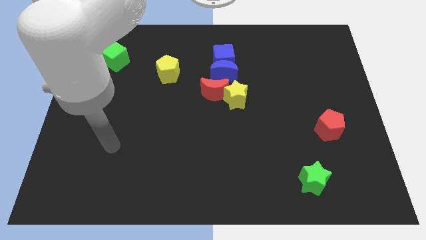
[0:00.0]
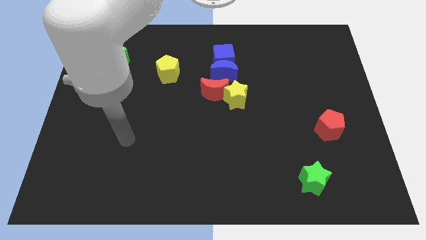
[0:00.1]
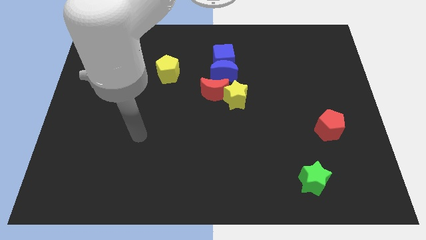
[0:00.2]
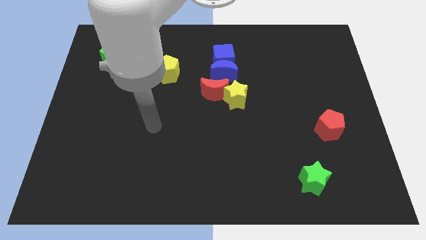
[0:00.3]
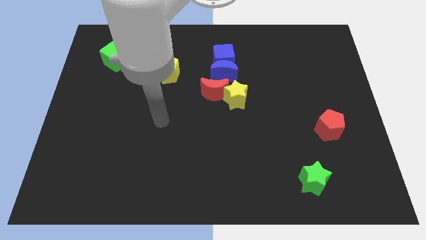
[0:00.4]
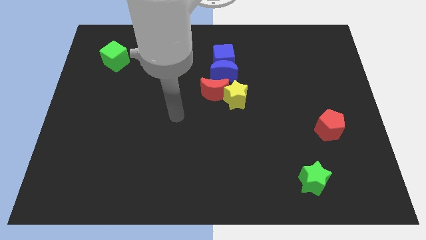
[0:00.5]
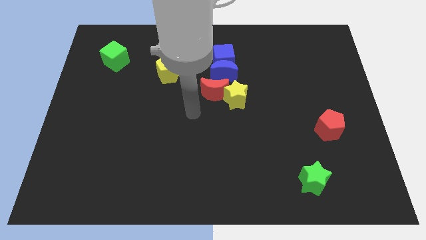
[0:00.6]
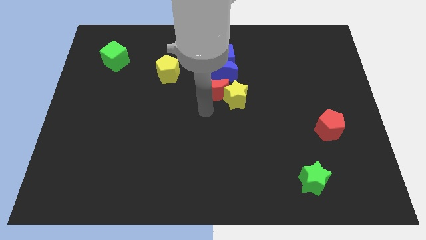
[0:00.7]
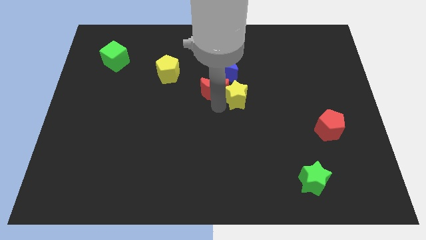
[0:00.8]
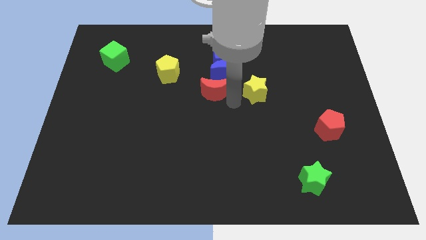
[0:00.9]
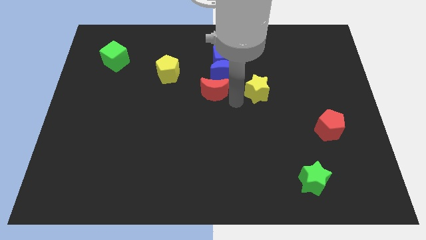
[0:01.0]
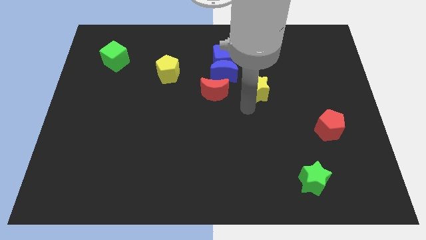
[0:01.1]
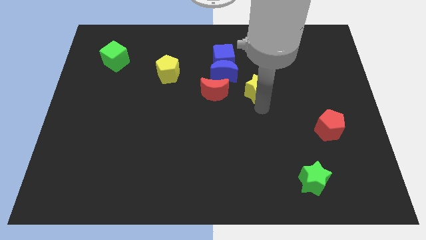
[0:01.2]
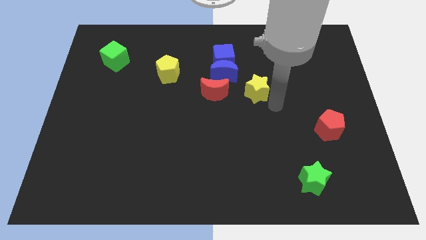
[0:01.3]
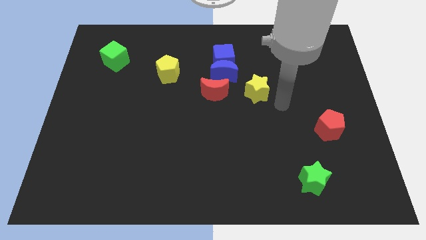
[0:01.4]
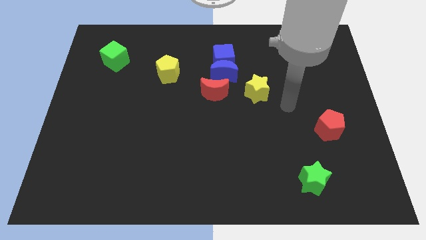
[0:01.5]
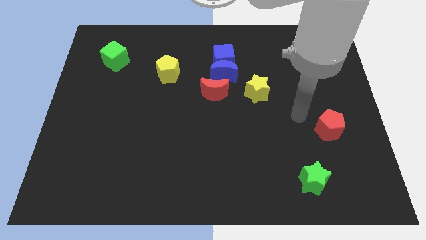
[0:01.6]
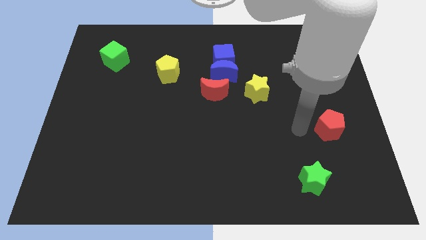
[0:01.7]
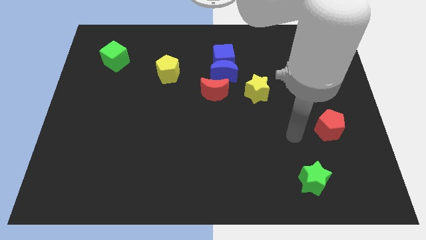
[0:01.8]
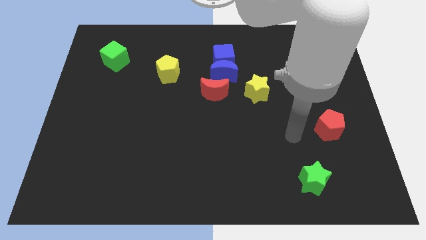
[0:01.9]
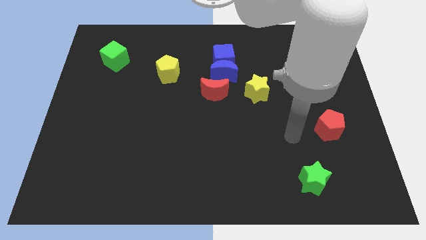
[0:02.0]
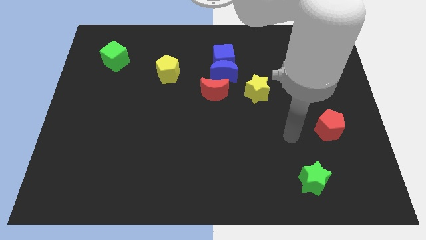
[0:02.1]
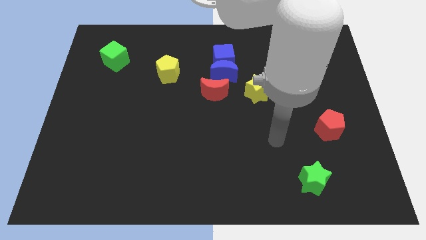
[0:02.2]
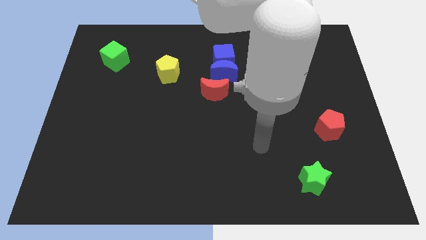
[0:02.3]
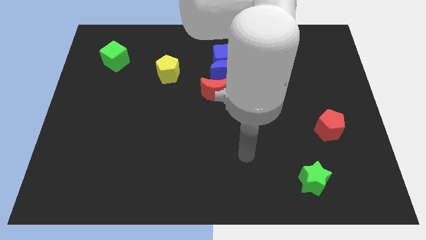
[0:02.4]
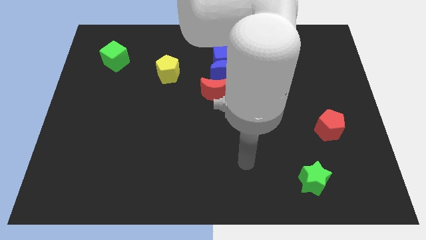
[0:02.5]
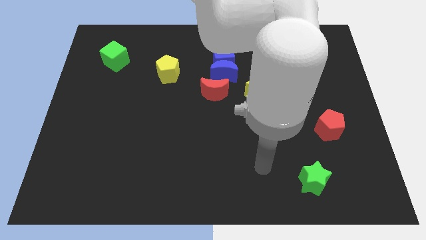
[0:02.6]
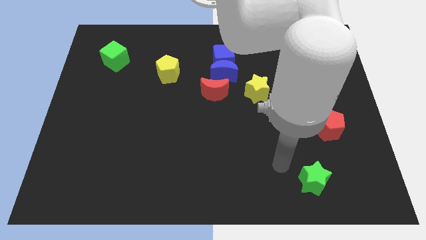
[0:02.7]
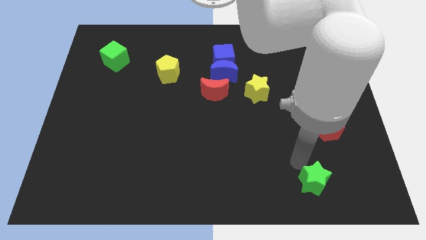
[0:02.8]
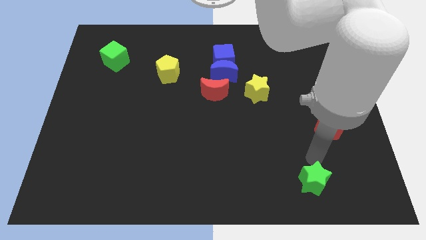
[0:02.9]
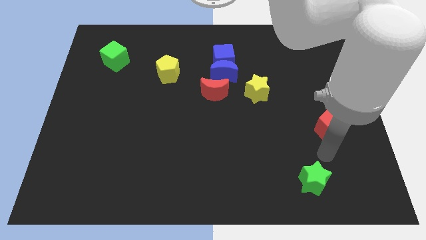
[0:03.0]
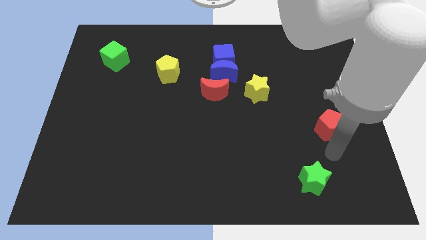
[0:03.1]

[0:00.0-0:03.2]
separate yellow star from the red crescent

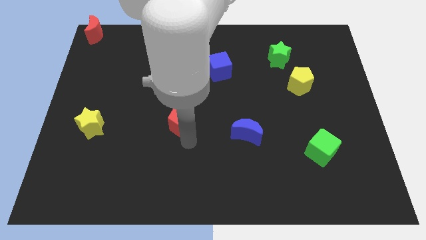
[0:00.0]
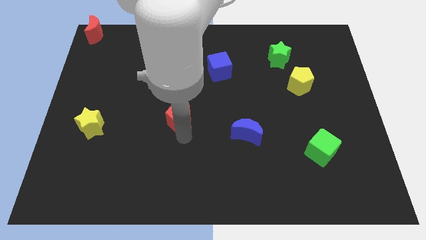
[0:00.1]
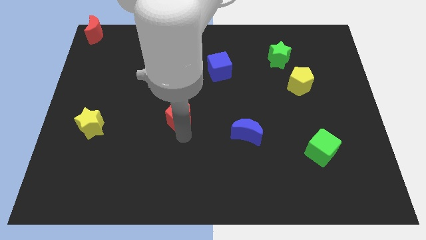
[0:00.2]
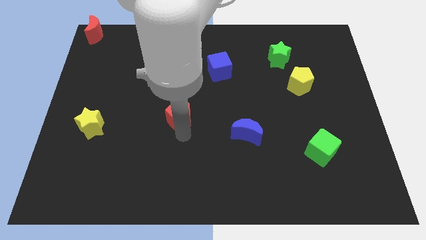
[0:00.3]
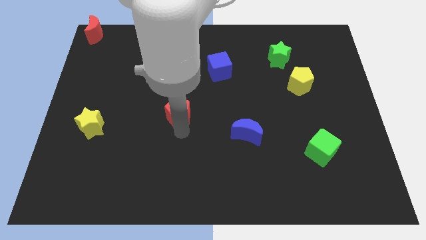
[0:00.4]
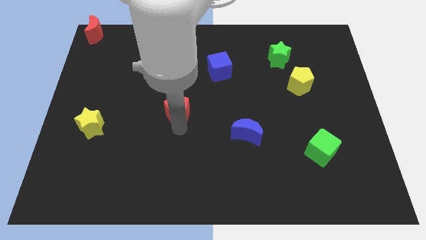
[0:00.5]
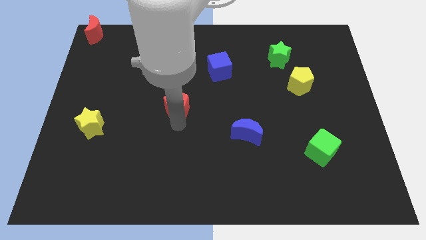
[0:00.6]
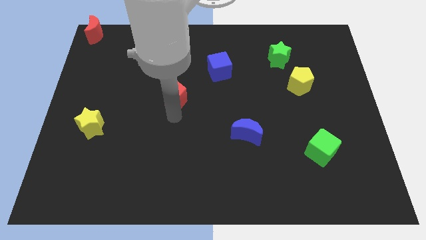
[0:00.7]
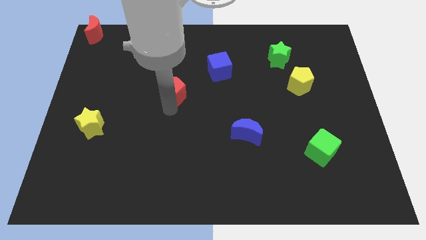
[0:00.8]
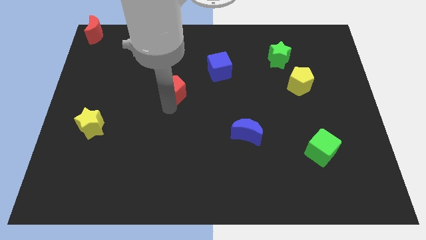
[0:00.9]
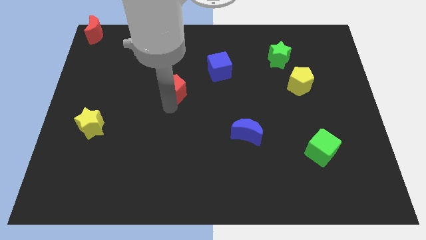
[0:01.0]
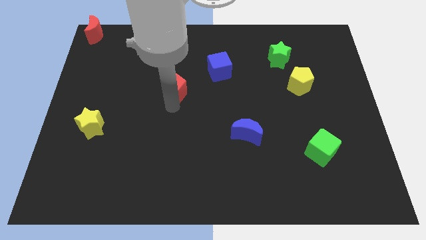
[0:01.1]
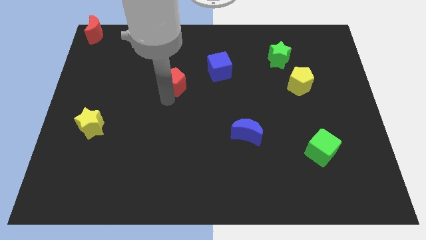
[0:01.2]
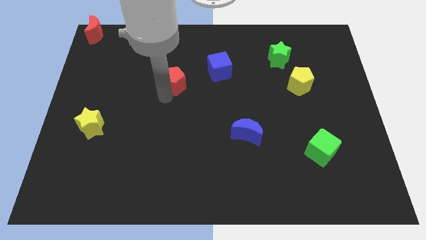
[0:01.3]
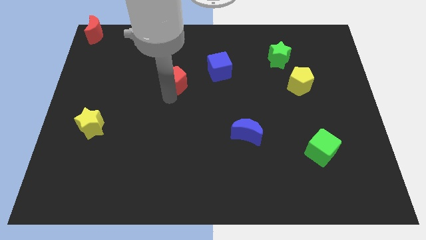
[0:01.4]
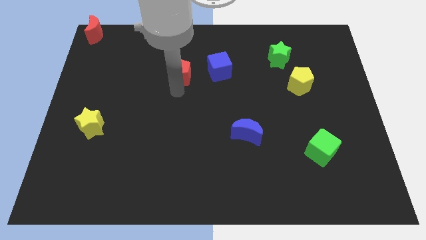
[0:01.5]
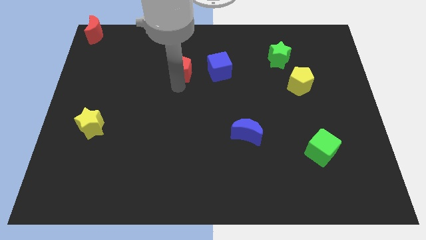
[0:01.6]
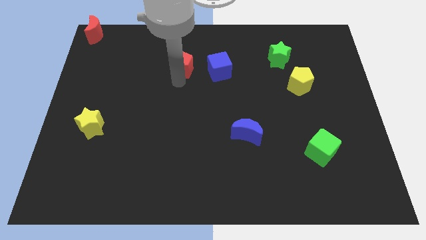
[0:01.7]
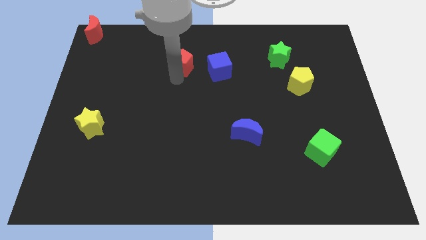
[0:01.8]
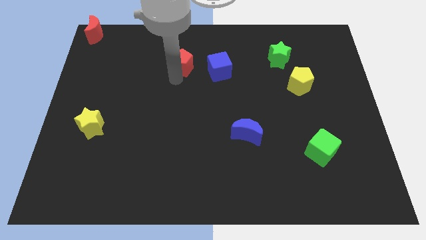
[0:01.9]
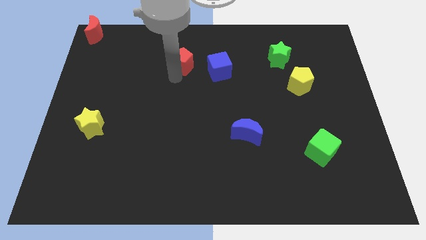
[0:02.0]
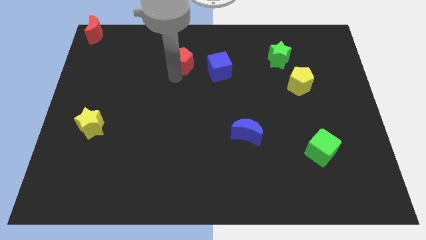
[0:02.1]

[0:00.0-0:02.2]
place red pentagon to left of blue cube

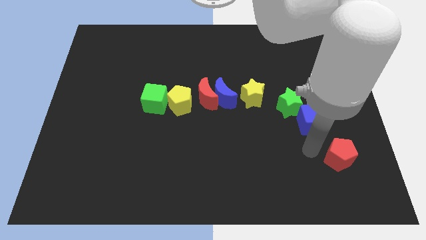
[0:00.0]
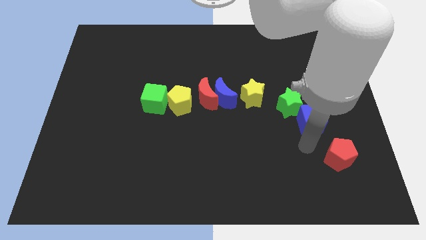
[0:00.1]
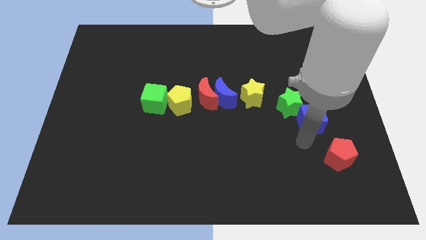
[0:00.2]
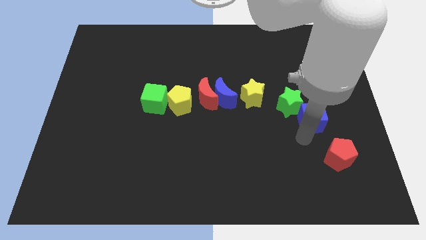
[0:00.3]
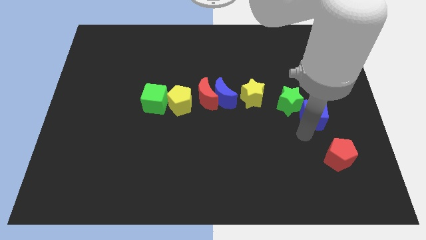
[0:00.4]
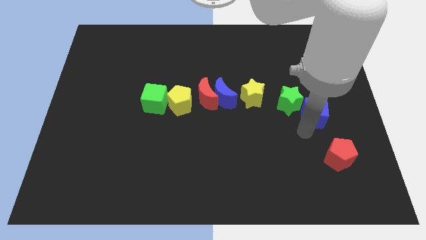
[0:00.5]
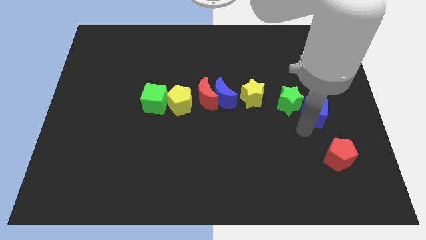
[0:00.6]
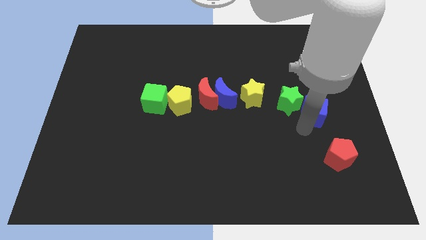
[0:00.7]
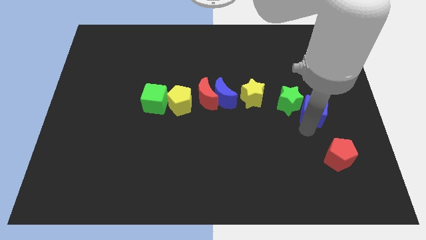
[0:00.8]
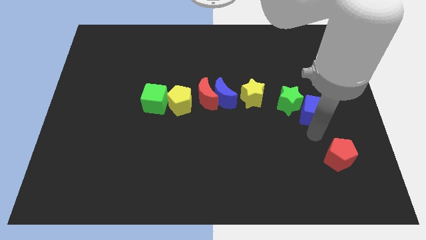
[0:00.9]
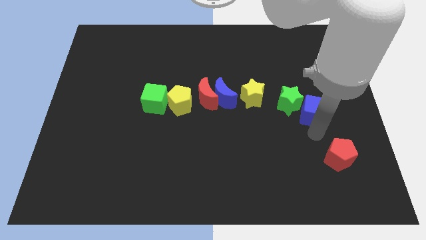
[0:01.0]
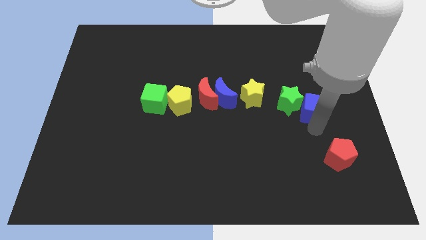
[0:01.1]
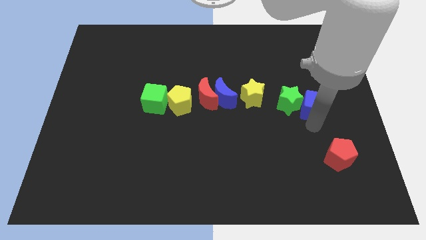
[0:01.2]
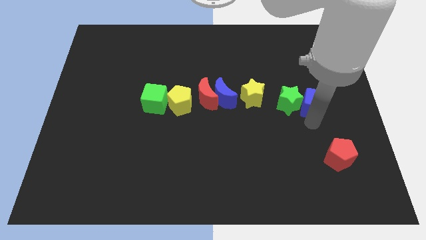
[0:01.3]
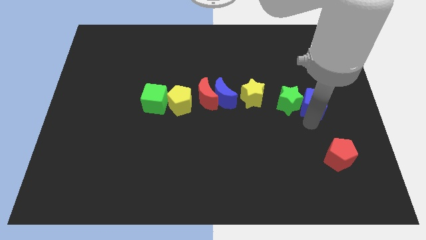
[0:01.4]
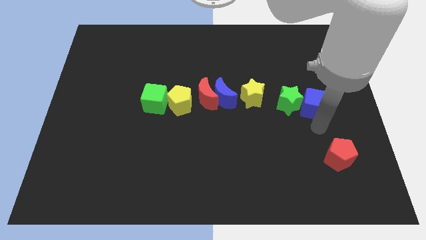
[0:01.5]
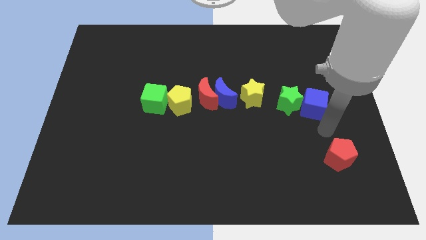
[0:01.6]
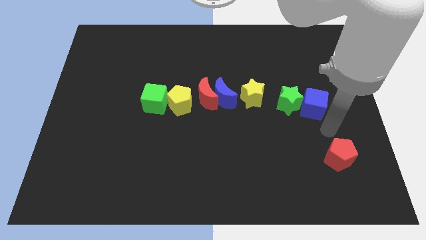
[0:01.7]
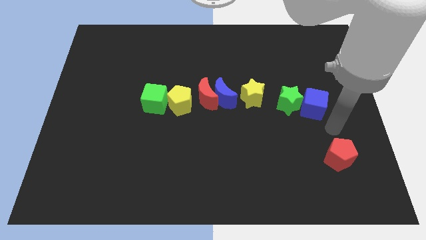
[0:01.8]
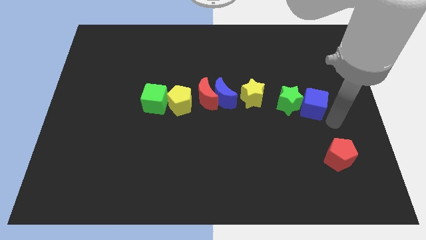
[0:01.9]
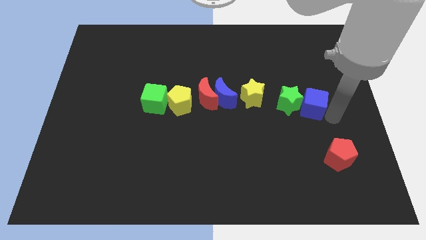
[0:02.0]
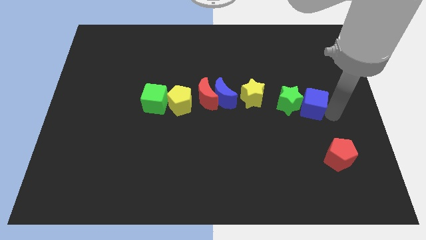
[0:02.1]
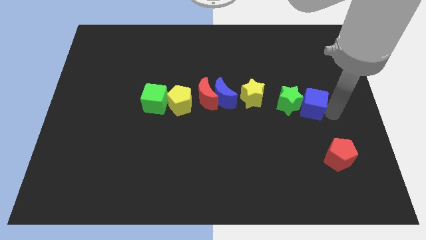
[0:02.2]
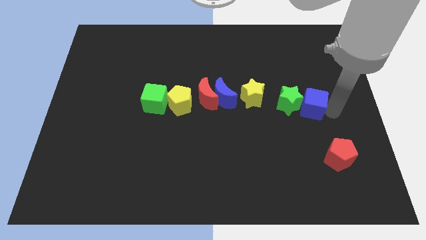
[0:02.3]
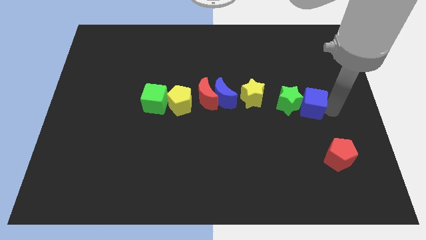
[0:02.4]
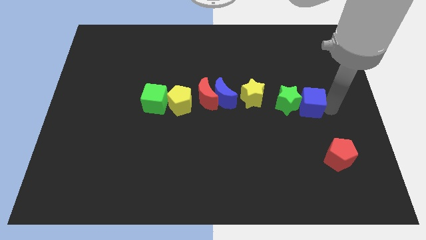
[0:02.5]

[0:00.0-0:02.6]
move blue cube into right of green star

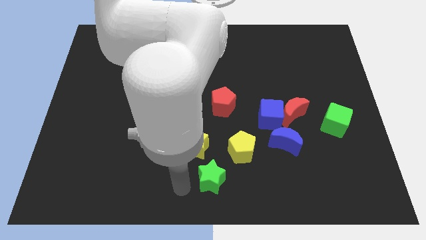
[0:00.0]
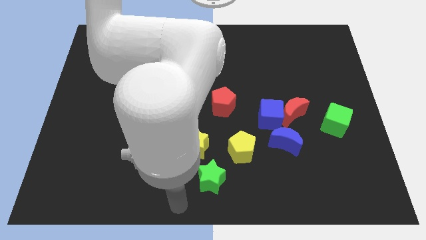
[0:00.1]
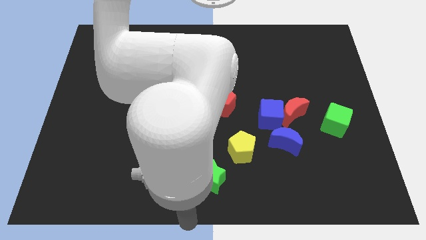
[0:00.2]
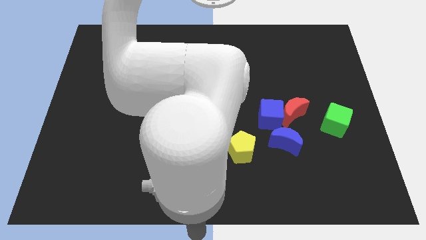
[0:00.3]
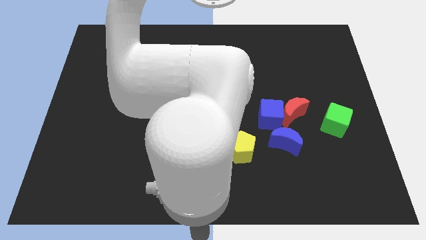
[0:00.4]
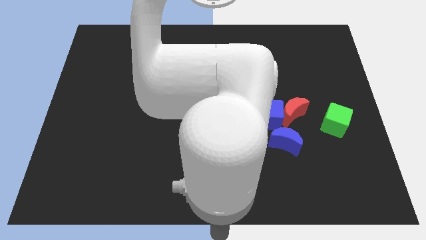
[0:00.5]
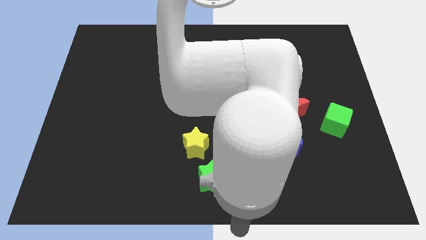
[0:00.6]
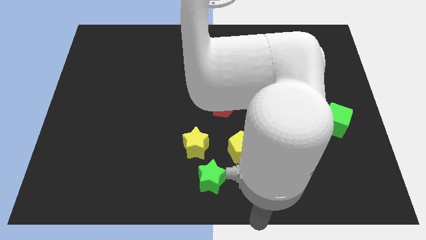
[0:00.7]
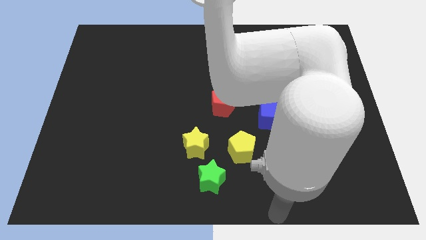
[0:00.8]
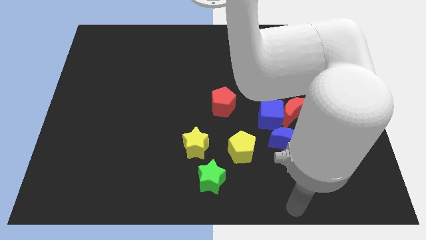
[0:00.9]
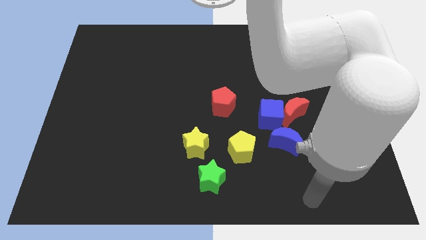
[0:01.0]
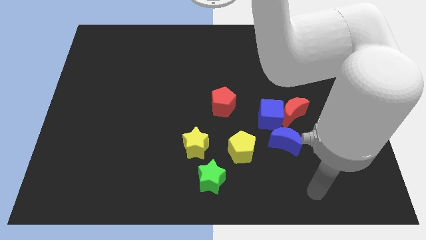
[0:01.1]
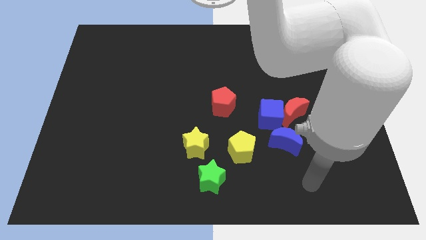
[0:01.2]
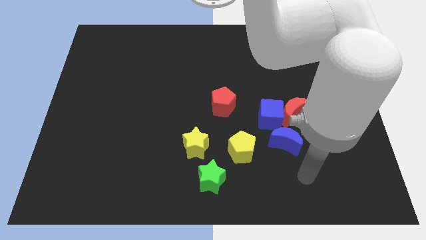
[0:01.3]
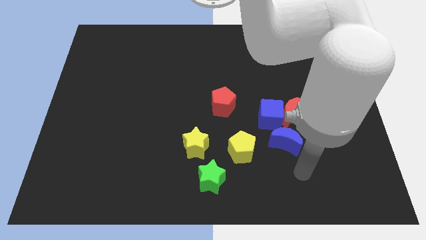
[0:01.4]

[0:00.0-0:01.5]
move your arm to the bottom of the blue crescent
